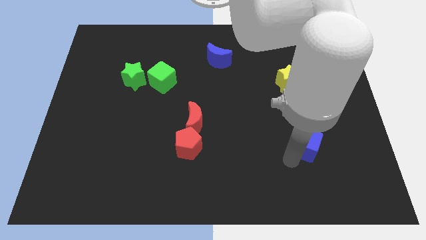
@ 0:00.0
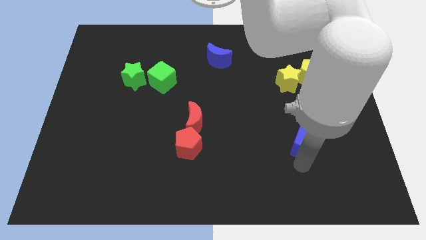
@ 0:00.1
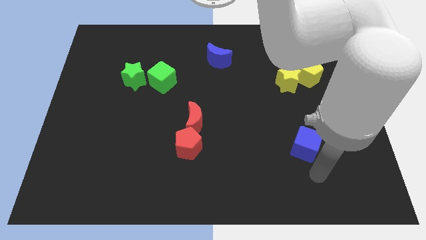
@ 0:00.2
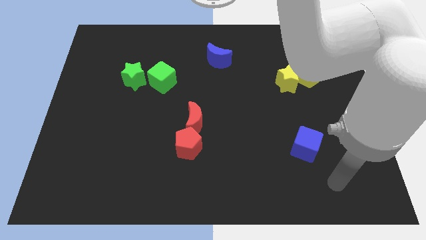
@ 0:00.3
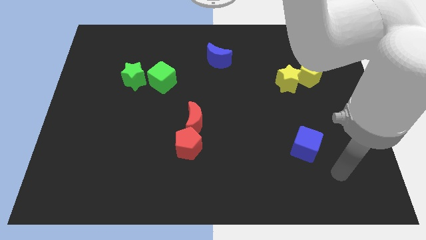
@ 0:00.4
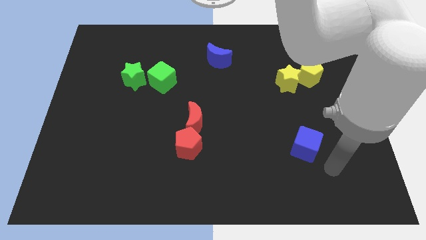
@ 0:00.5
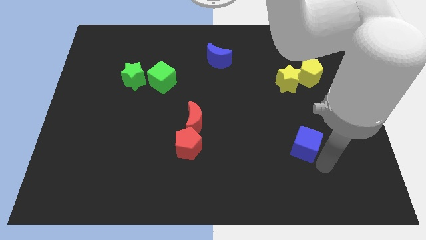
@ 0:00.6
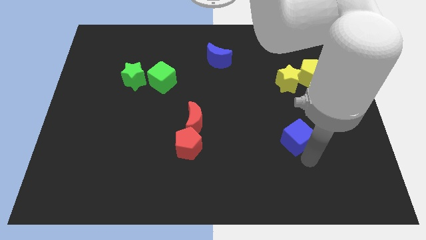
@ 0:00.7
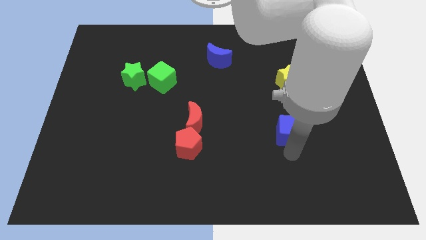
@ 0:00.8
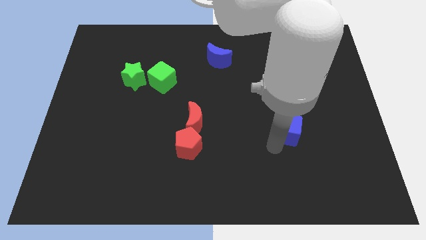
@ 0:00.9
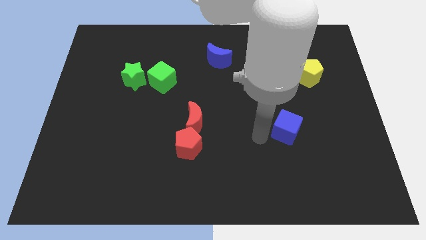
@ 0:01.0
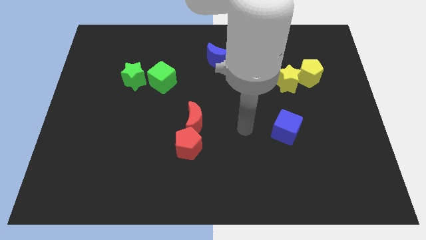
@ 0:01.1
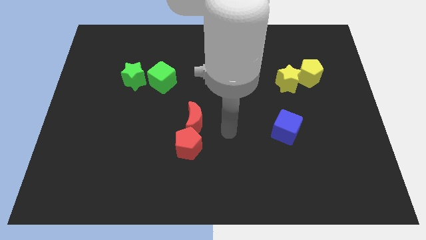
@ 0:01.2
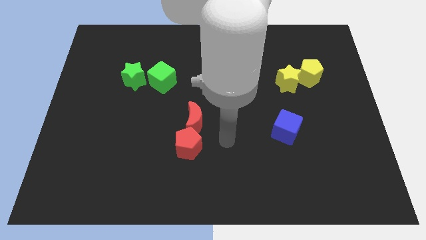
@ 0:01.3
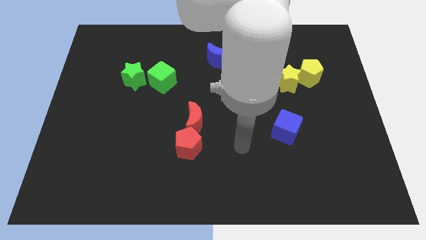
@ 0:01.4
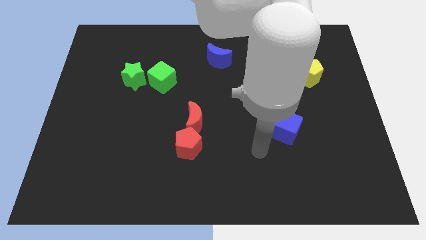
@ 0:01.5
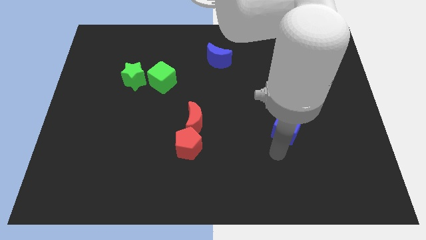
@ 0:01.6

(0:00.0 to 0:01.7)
move the blue cube diagonally bottom left to the yellow pentagon

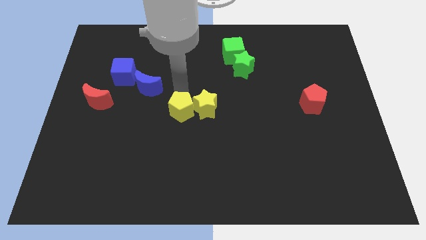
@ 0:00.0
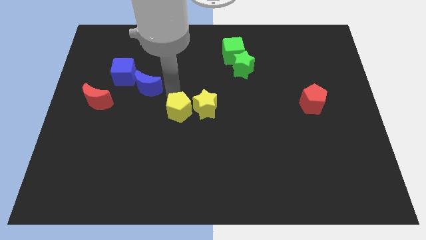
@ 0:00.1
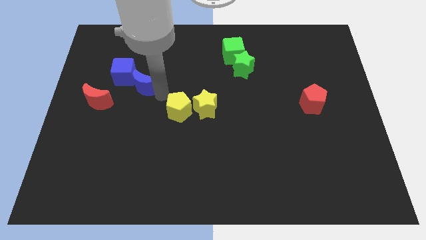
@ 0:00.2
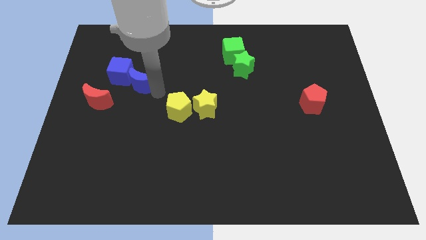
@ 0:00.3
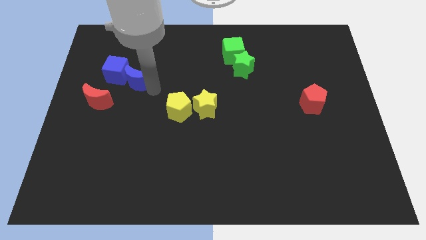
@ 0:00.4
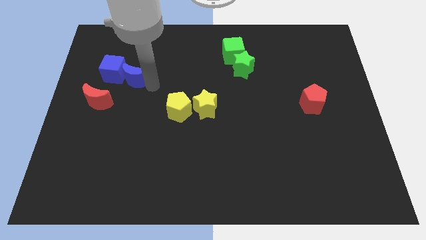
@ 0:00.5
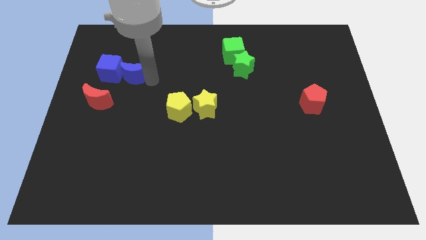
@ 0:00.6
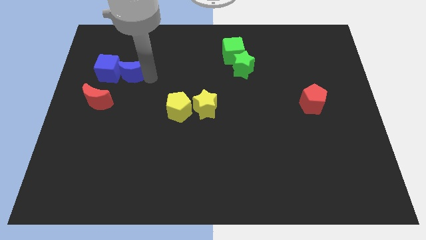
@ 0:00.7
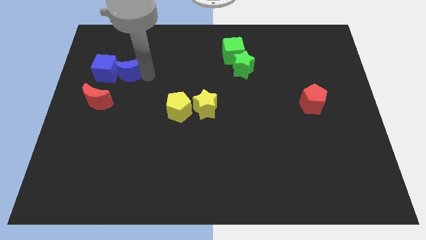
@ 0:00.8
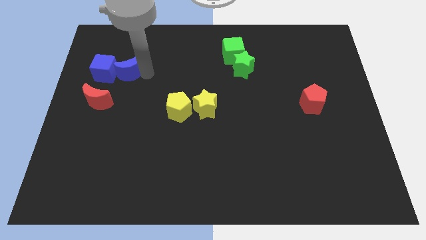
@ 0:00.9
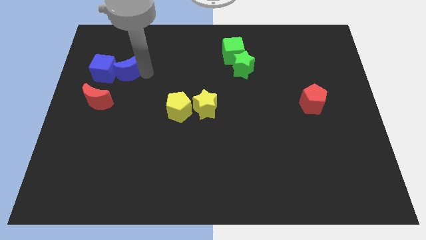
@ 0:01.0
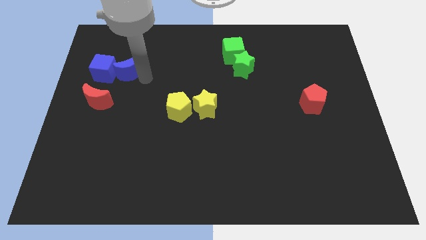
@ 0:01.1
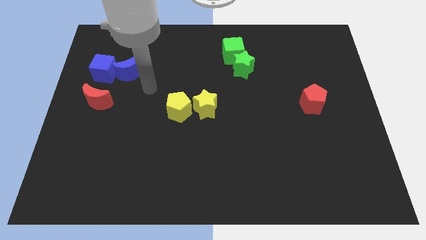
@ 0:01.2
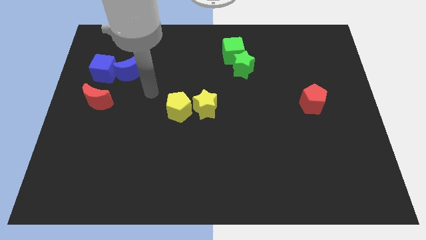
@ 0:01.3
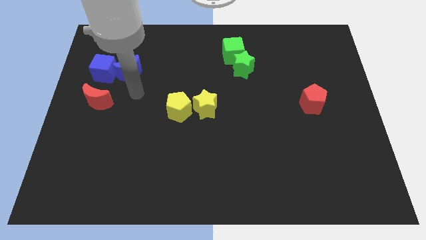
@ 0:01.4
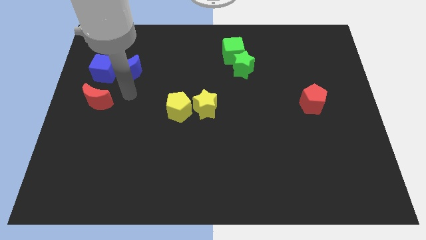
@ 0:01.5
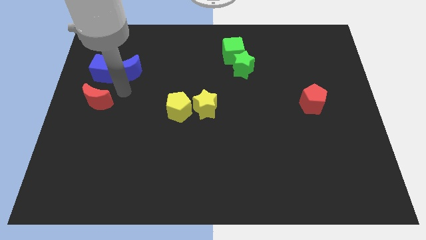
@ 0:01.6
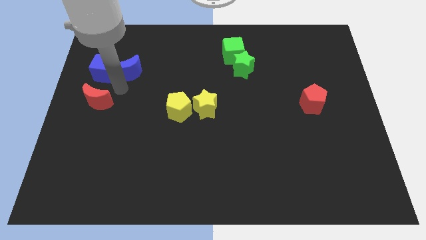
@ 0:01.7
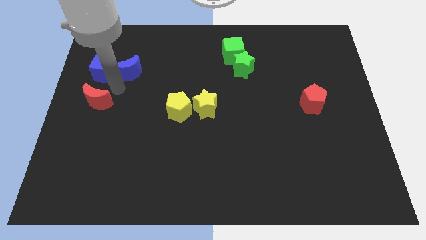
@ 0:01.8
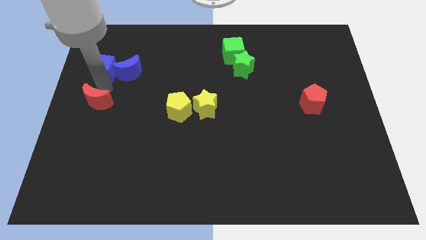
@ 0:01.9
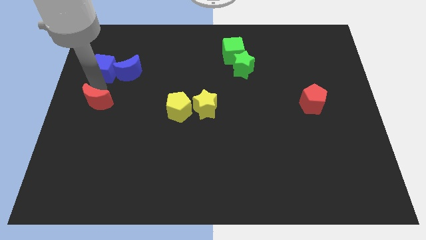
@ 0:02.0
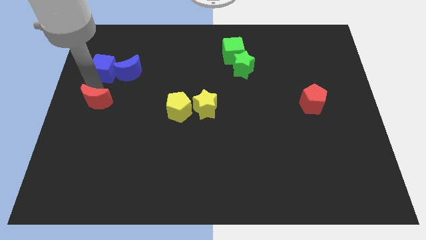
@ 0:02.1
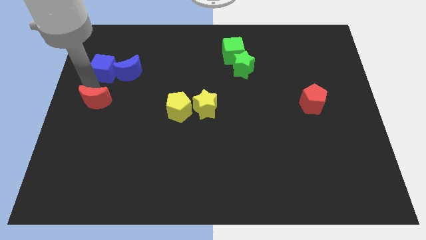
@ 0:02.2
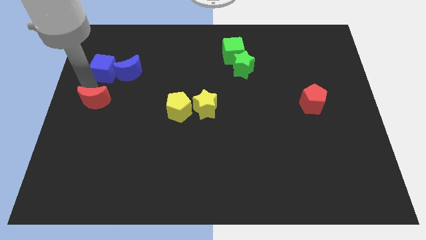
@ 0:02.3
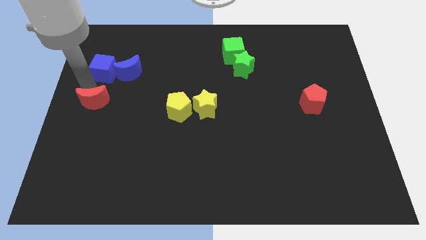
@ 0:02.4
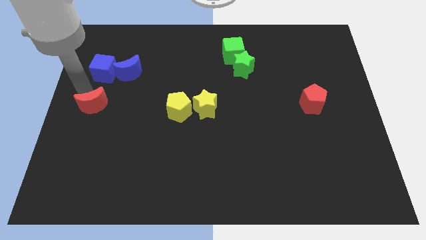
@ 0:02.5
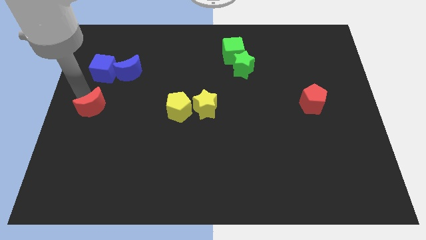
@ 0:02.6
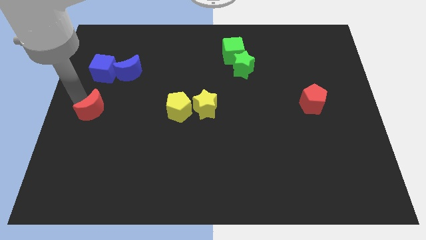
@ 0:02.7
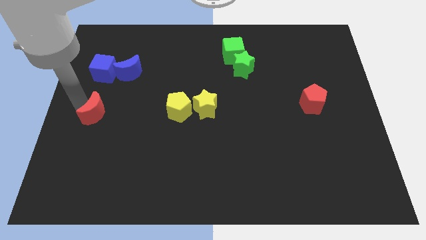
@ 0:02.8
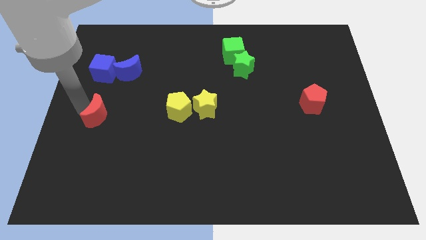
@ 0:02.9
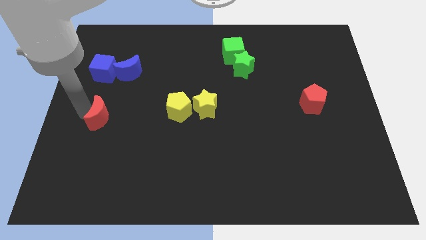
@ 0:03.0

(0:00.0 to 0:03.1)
push the blue cube towards the left side of the board using the blue crescent

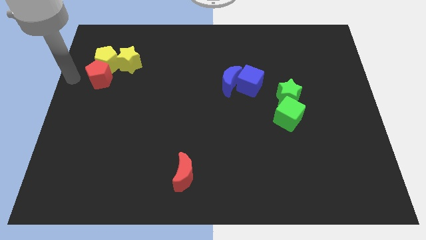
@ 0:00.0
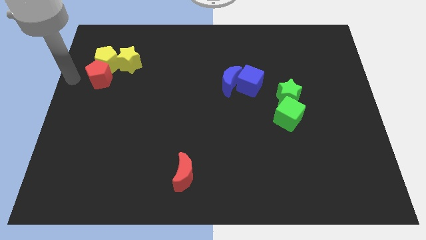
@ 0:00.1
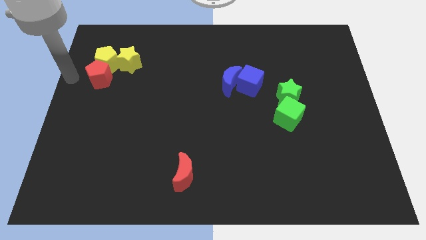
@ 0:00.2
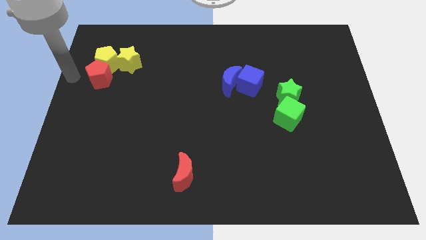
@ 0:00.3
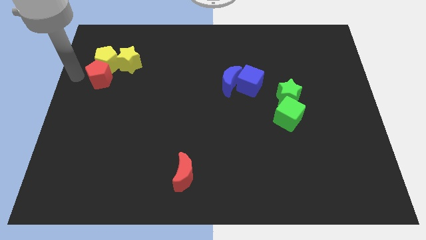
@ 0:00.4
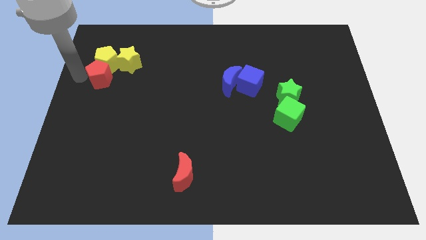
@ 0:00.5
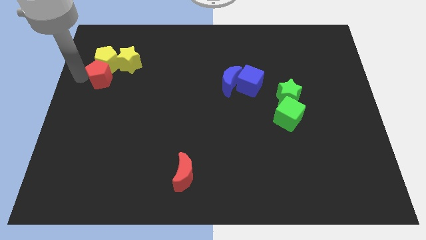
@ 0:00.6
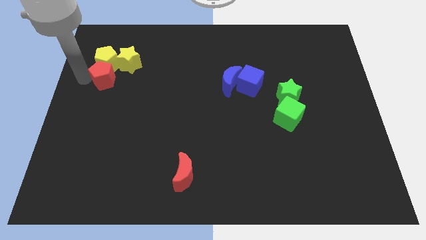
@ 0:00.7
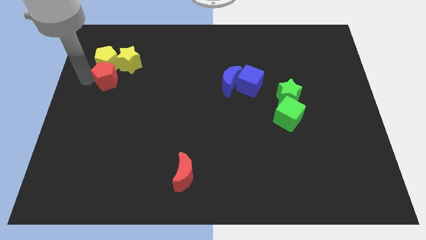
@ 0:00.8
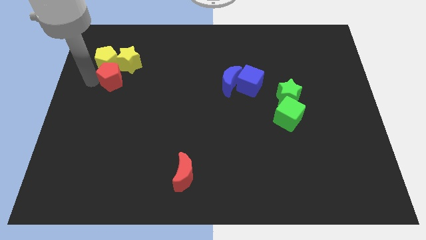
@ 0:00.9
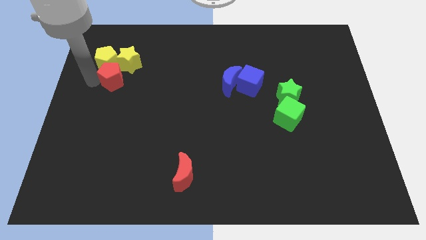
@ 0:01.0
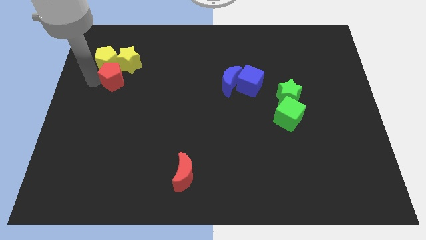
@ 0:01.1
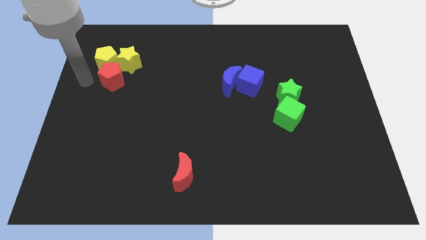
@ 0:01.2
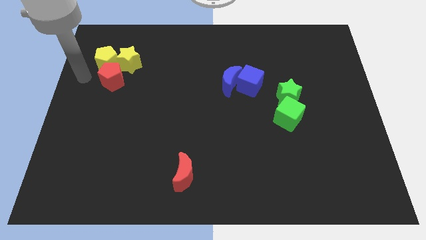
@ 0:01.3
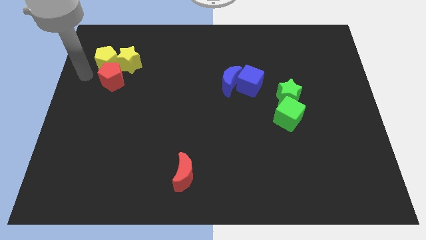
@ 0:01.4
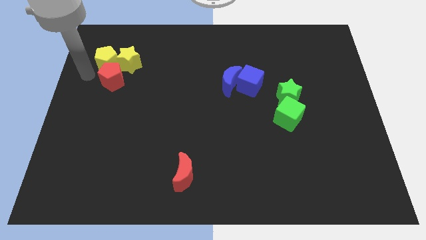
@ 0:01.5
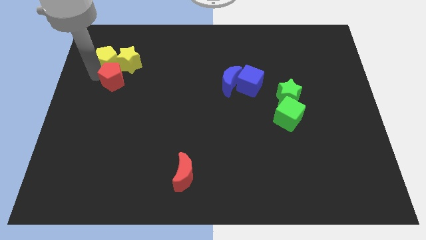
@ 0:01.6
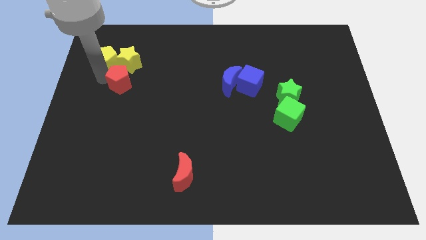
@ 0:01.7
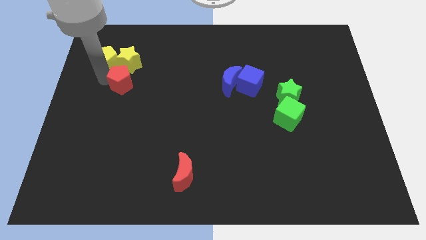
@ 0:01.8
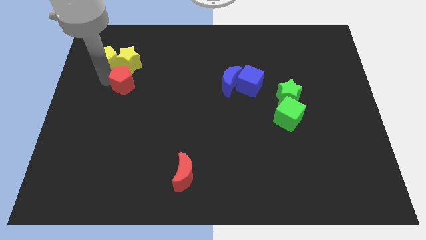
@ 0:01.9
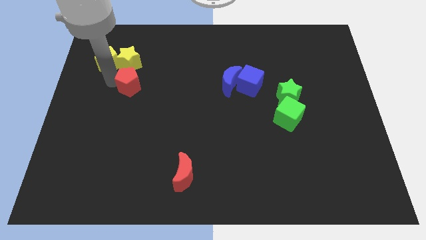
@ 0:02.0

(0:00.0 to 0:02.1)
move the red pentagon to the bottom of the yellow star

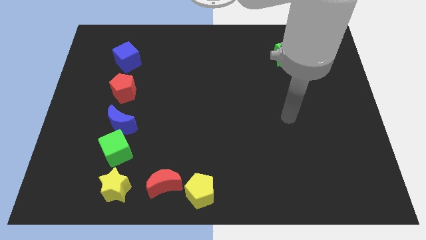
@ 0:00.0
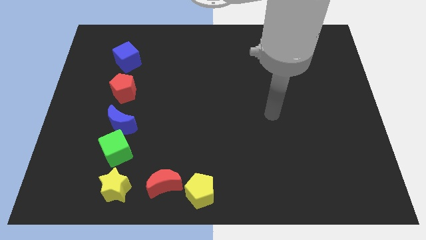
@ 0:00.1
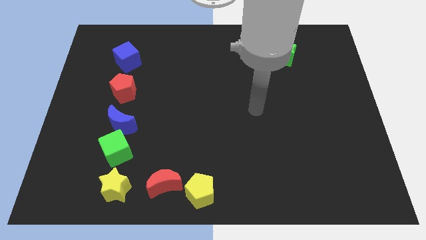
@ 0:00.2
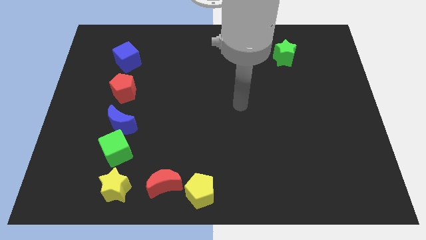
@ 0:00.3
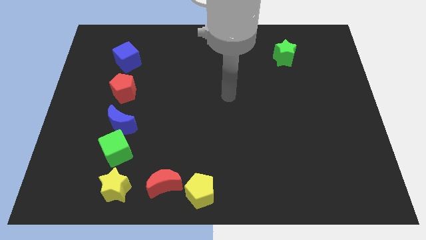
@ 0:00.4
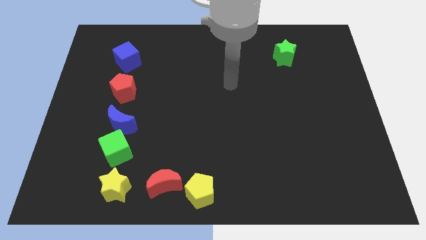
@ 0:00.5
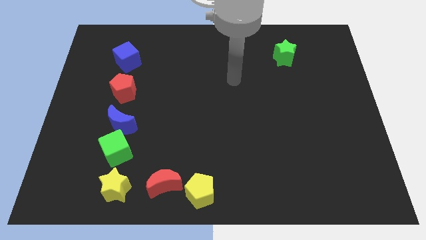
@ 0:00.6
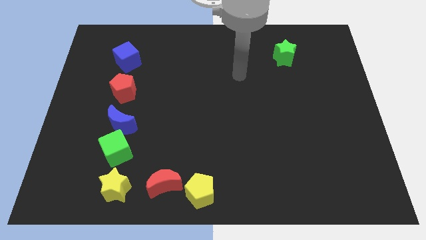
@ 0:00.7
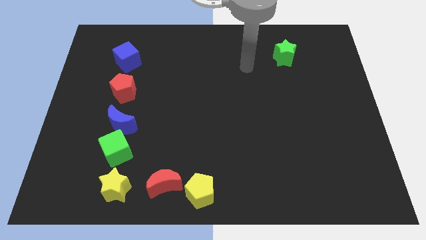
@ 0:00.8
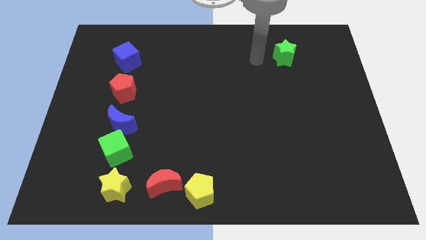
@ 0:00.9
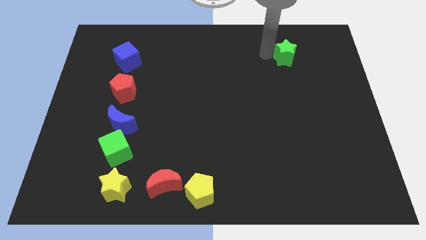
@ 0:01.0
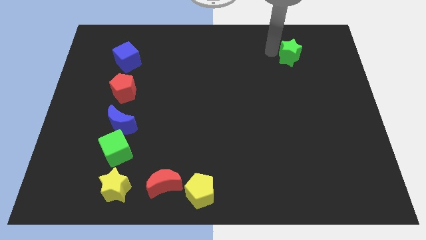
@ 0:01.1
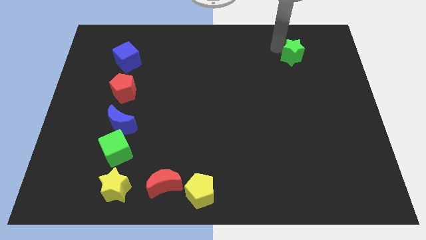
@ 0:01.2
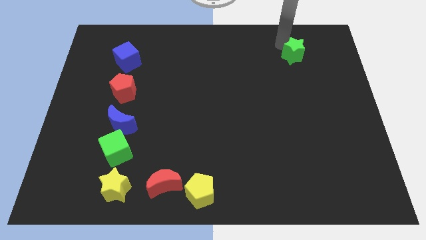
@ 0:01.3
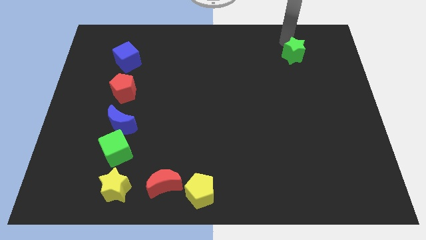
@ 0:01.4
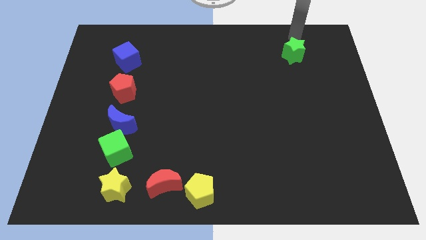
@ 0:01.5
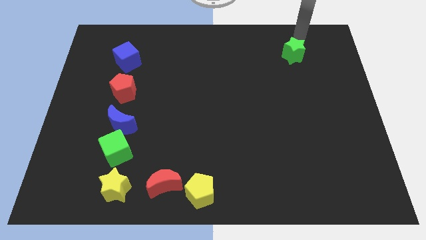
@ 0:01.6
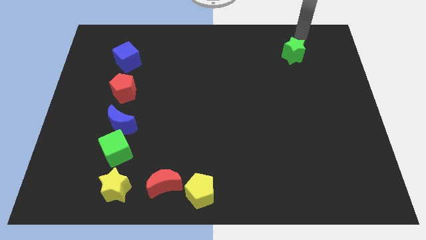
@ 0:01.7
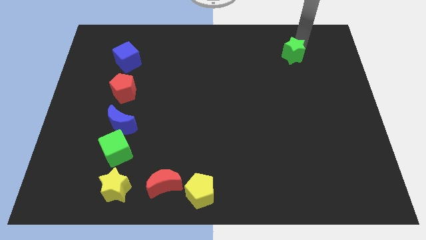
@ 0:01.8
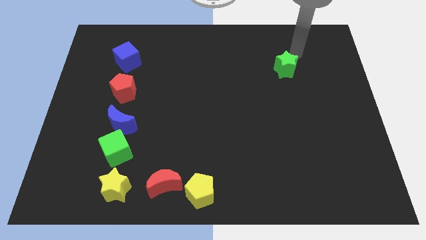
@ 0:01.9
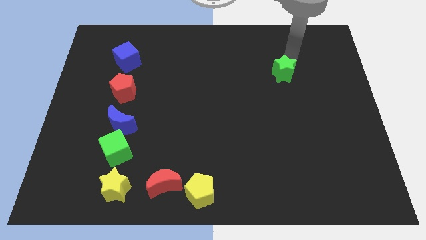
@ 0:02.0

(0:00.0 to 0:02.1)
slide the green star slightly downwards
